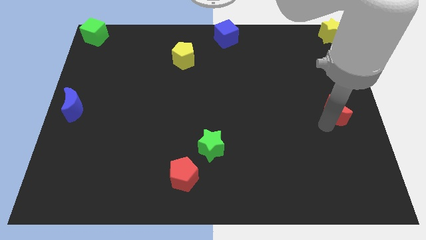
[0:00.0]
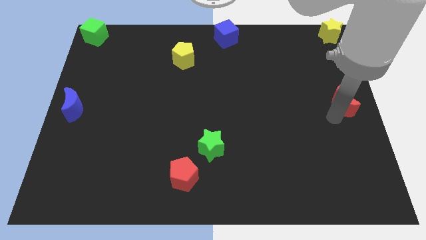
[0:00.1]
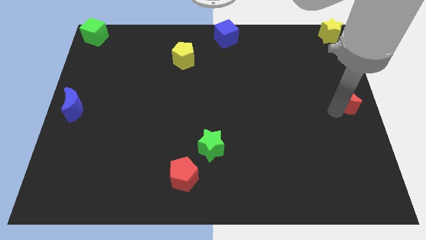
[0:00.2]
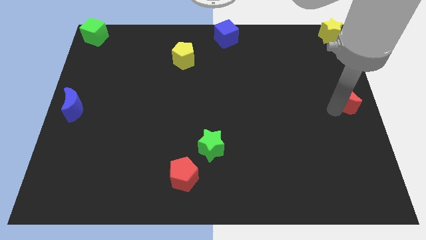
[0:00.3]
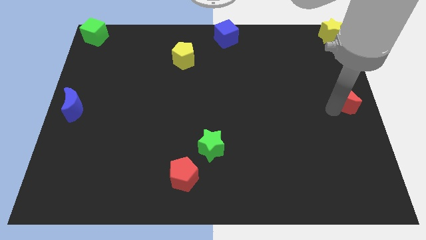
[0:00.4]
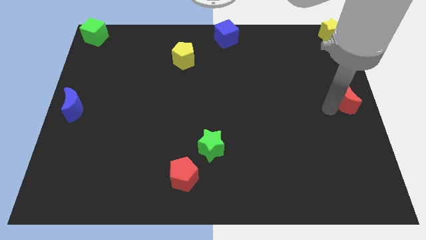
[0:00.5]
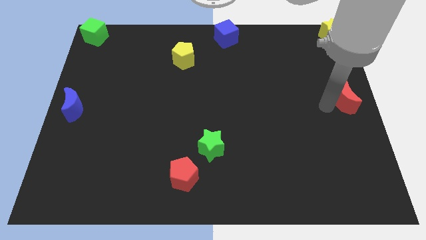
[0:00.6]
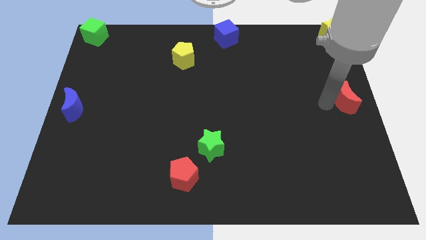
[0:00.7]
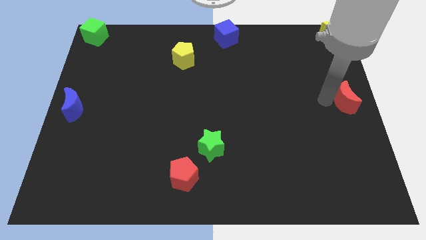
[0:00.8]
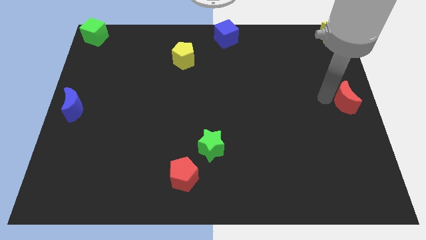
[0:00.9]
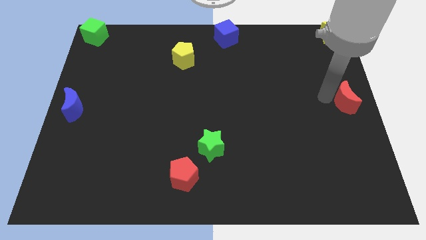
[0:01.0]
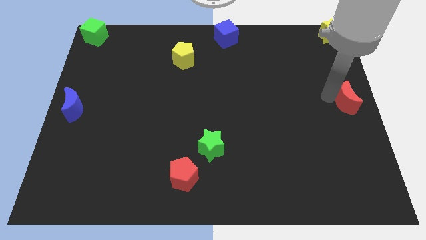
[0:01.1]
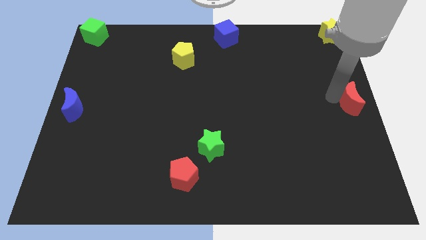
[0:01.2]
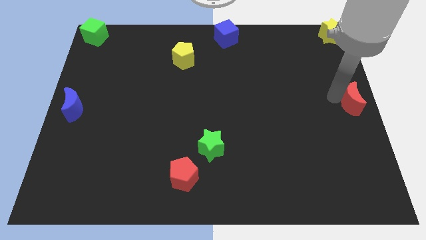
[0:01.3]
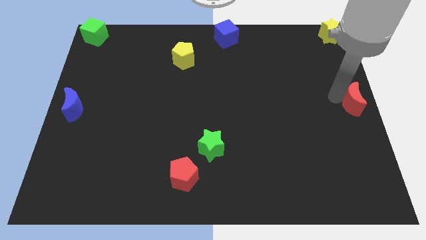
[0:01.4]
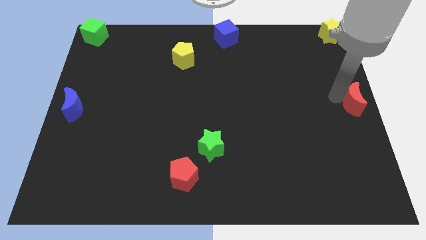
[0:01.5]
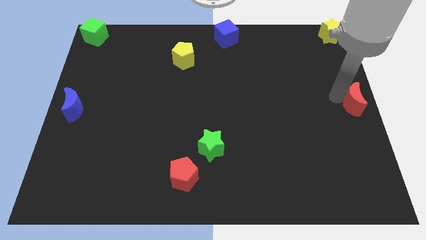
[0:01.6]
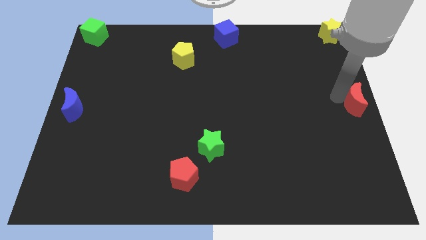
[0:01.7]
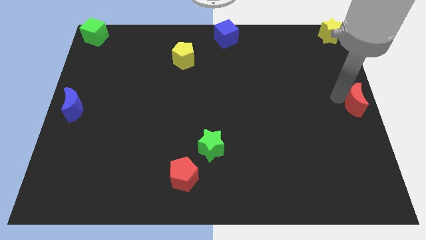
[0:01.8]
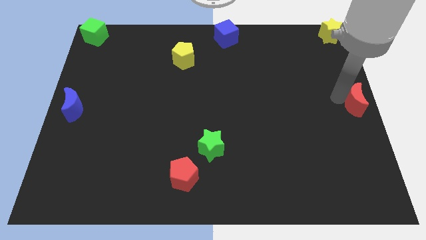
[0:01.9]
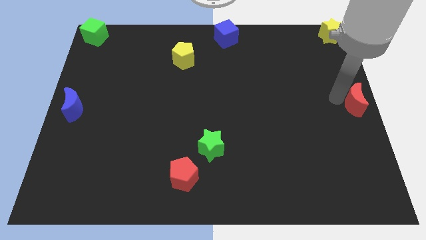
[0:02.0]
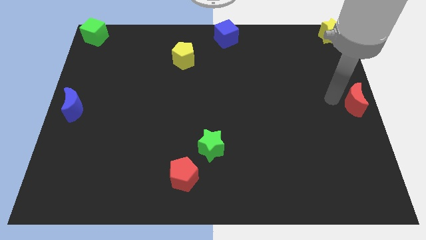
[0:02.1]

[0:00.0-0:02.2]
move the red moon to the center right of the board

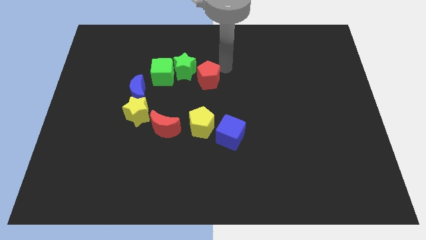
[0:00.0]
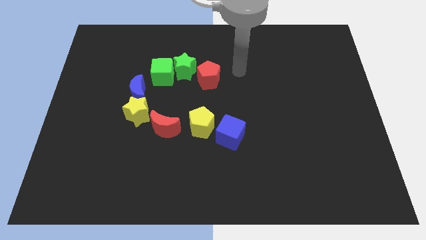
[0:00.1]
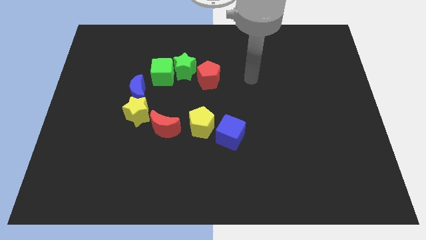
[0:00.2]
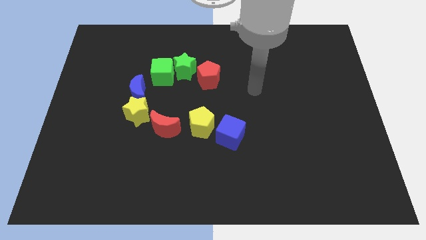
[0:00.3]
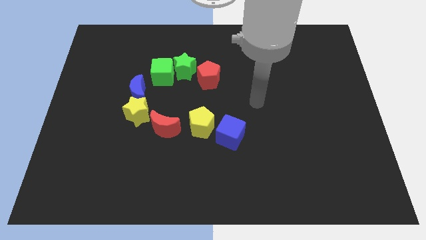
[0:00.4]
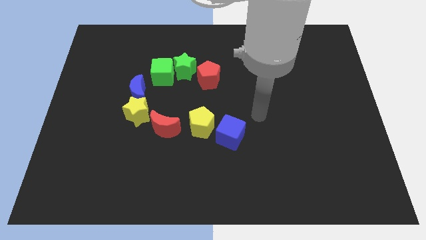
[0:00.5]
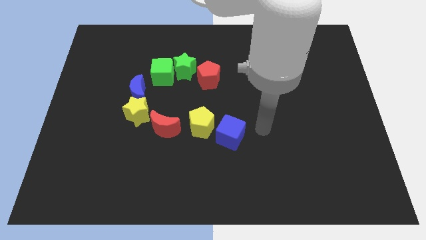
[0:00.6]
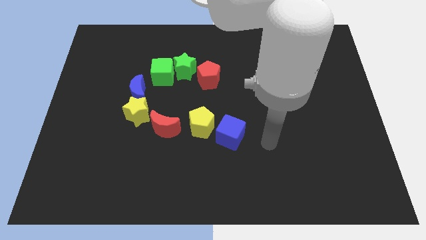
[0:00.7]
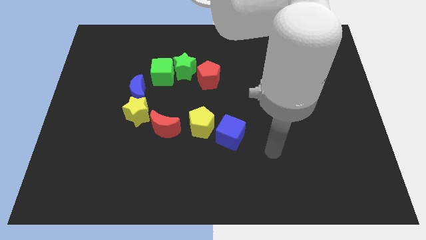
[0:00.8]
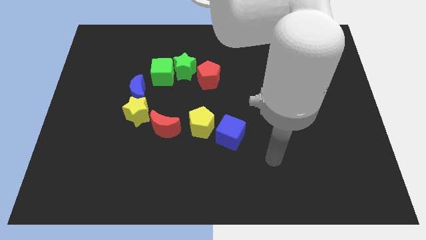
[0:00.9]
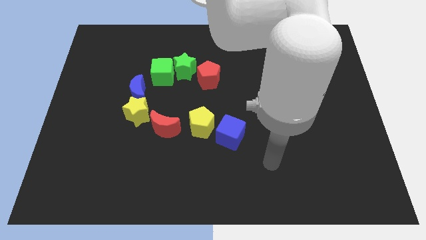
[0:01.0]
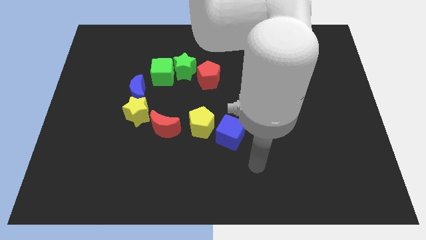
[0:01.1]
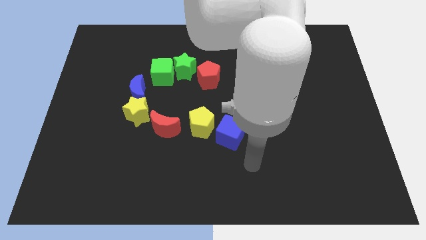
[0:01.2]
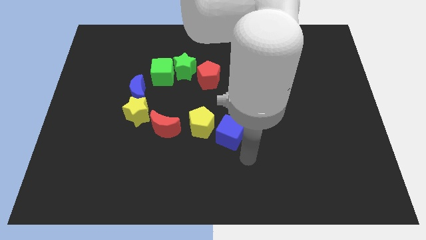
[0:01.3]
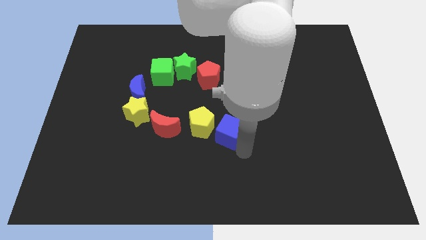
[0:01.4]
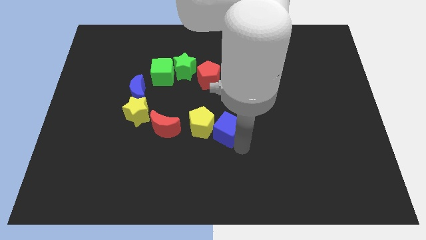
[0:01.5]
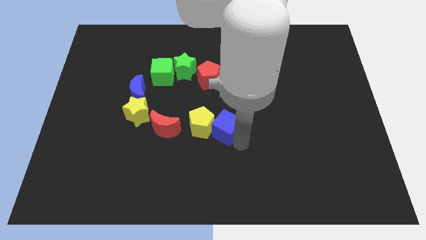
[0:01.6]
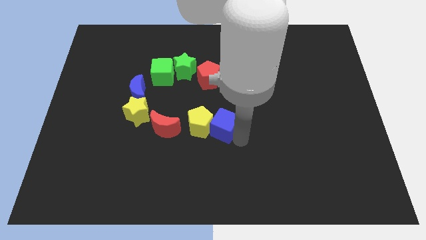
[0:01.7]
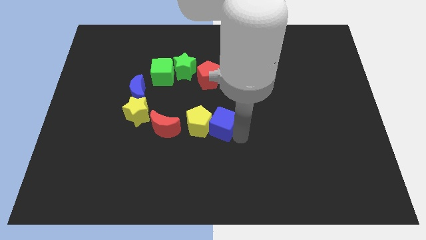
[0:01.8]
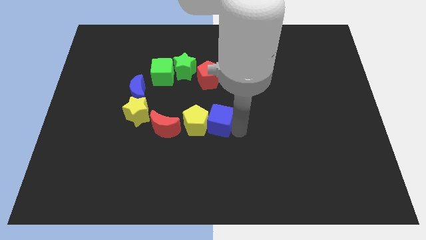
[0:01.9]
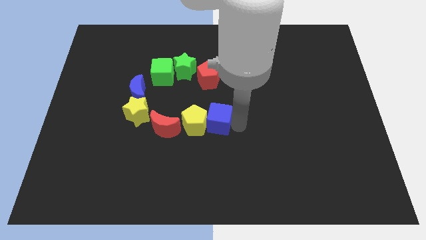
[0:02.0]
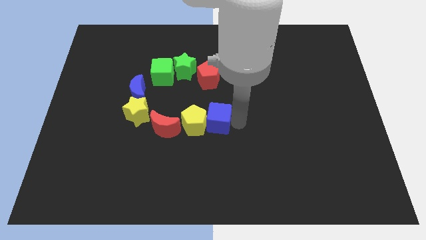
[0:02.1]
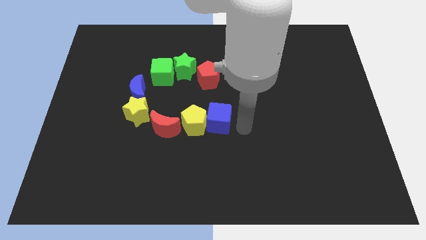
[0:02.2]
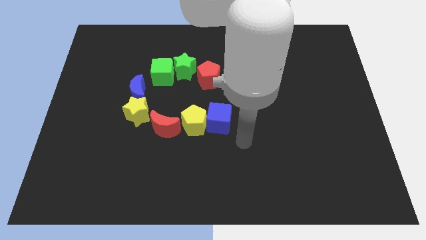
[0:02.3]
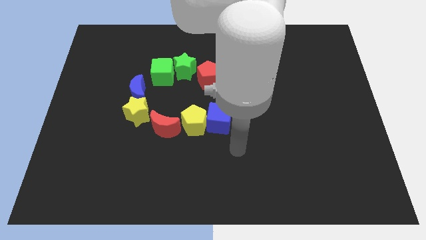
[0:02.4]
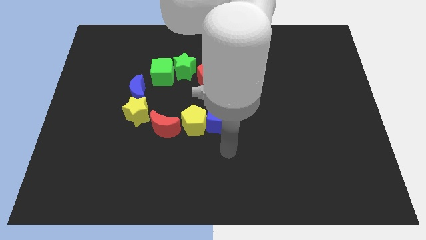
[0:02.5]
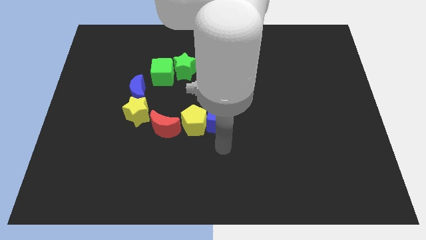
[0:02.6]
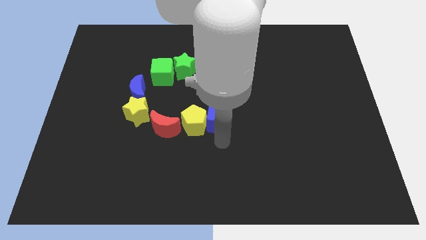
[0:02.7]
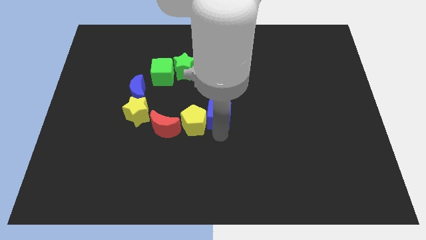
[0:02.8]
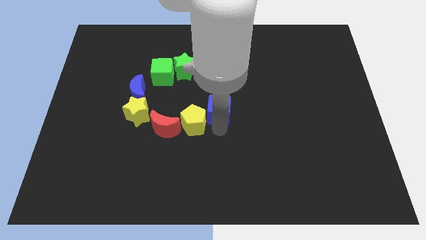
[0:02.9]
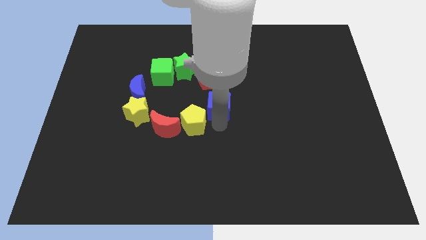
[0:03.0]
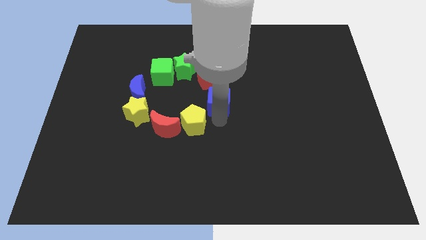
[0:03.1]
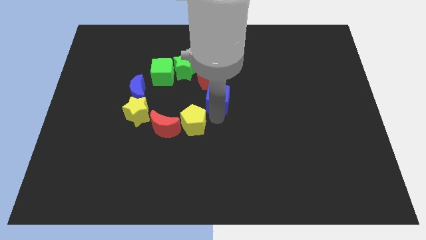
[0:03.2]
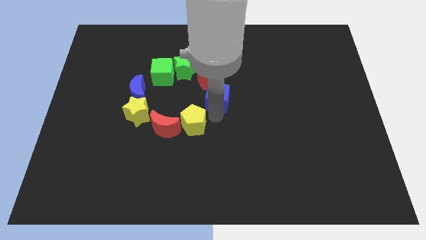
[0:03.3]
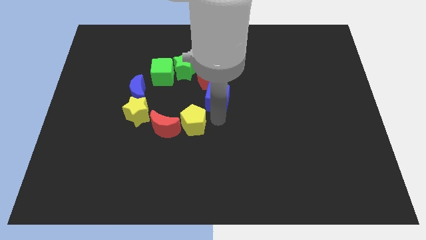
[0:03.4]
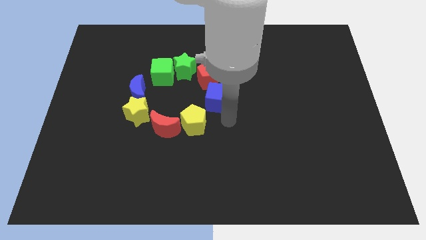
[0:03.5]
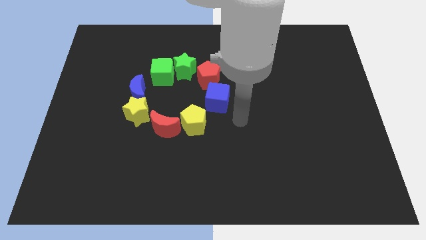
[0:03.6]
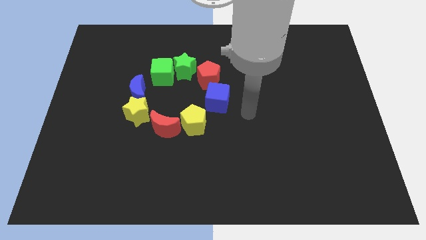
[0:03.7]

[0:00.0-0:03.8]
push the blue cube slightly towards the red pentagon

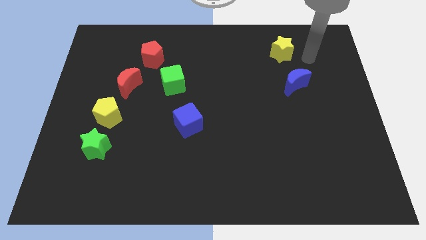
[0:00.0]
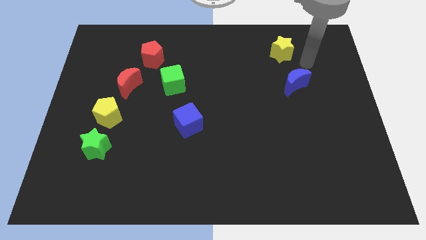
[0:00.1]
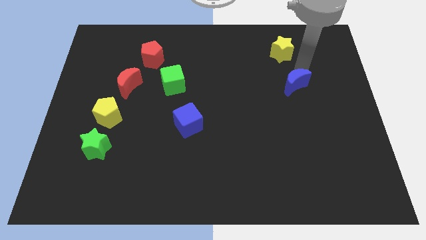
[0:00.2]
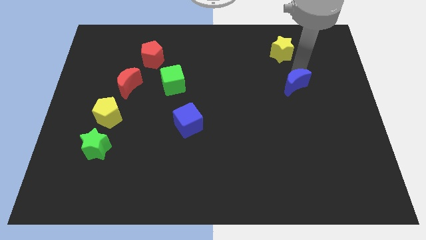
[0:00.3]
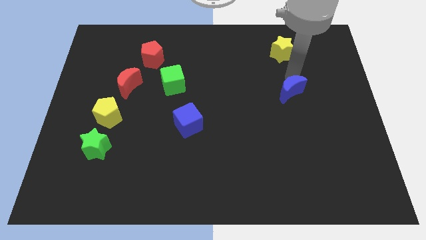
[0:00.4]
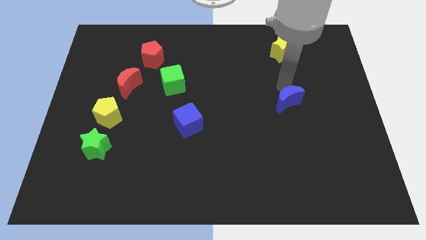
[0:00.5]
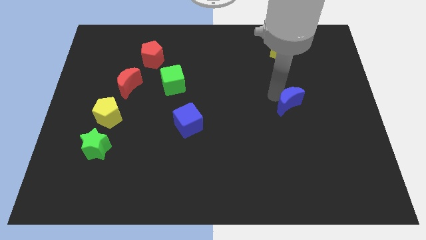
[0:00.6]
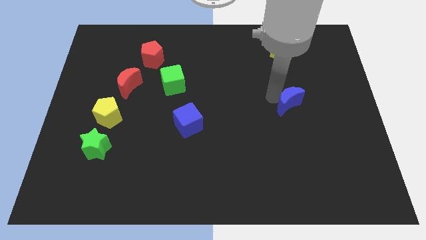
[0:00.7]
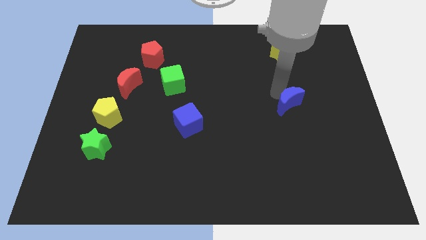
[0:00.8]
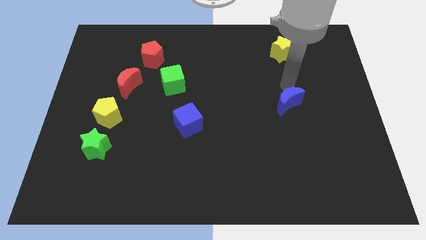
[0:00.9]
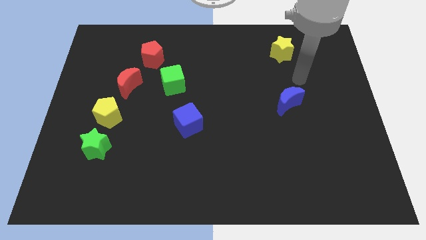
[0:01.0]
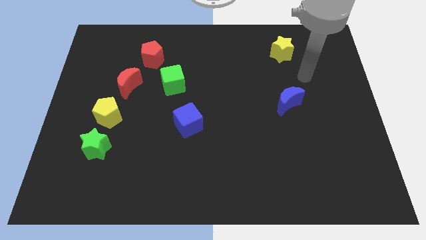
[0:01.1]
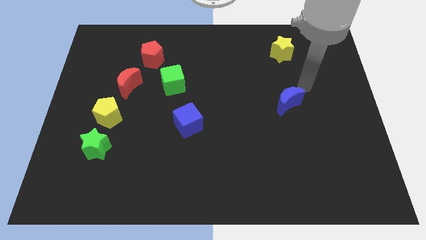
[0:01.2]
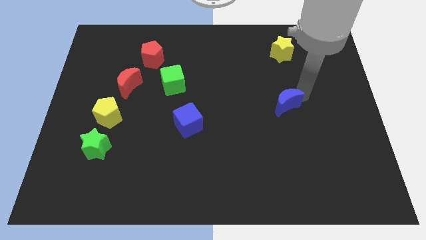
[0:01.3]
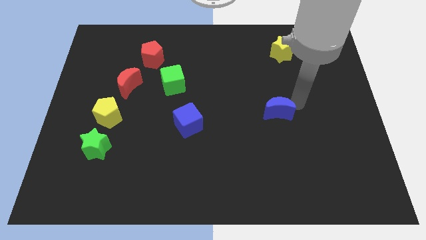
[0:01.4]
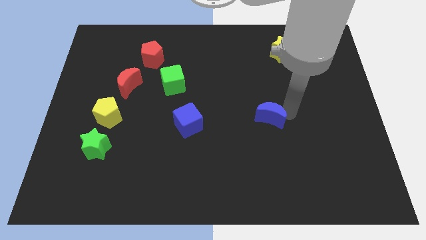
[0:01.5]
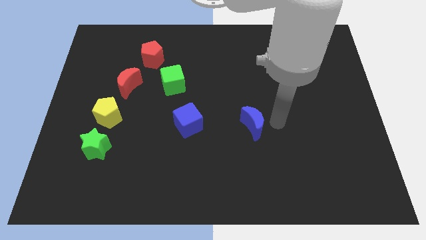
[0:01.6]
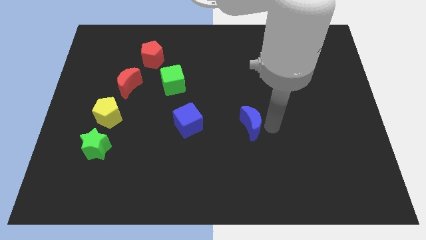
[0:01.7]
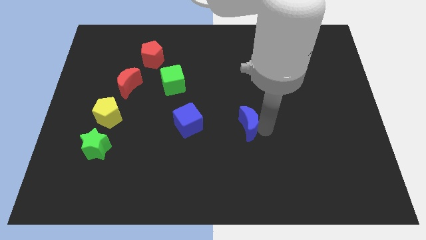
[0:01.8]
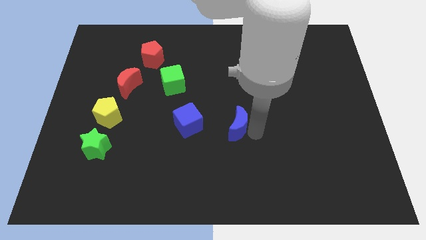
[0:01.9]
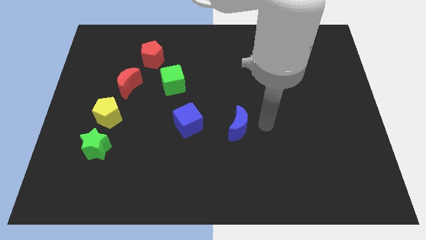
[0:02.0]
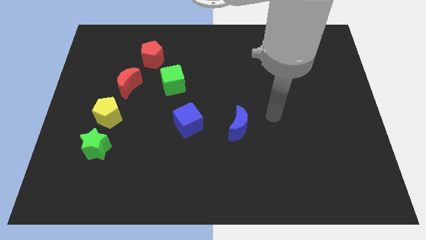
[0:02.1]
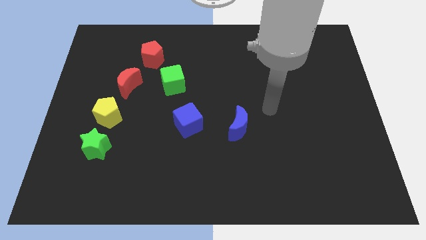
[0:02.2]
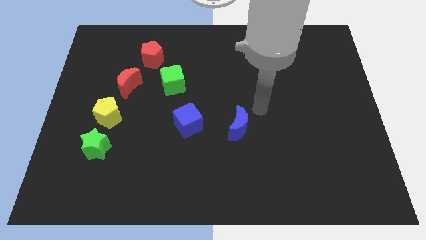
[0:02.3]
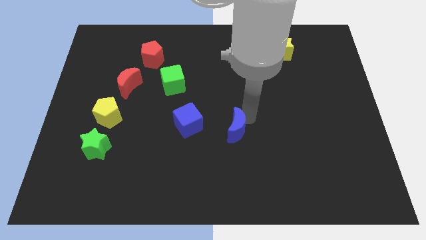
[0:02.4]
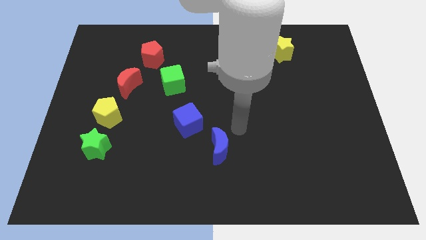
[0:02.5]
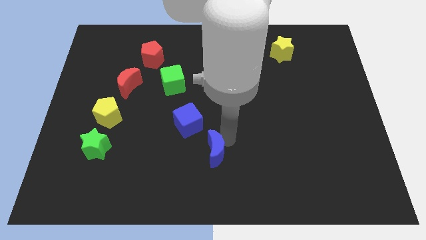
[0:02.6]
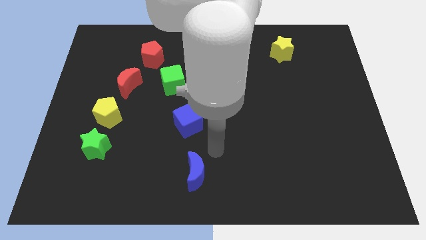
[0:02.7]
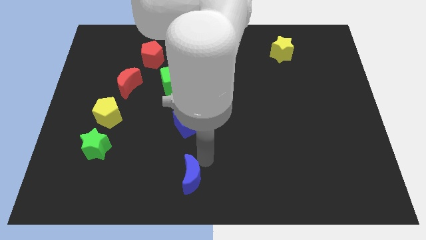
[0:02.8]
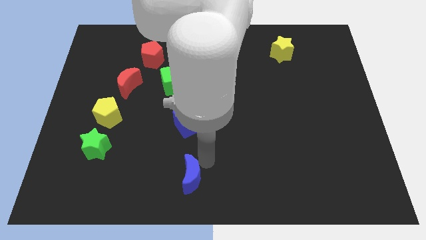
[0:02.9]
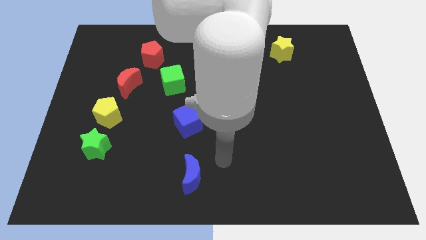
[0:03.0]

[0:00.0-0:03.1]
put the blue moon below the blue cube
